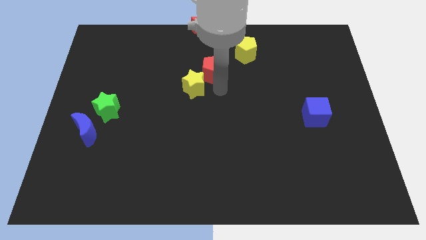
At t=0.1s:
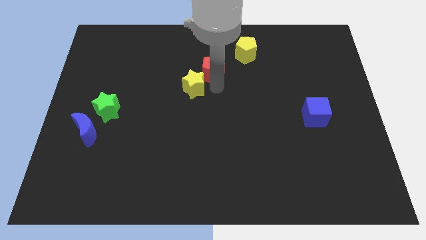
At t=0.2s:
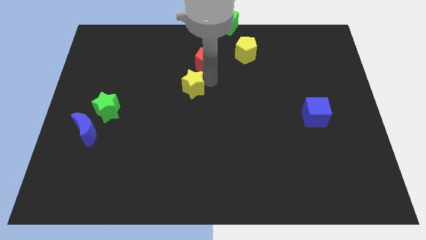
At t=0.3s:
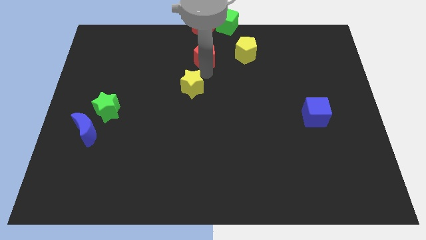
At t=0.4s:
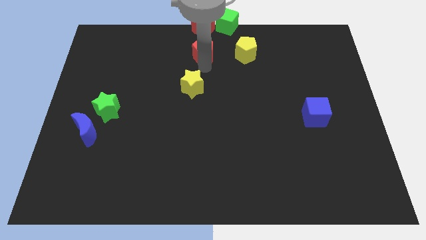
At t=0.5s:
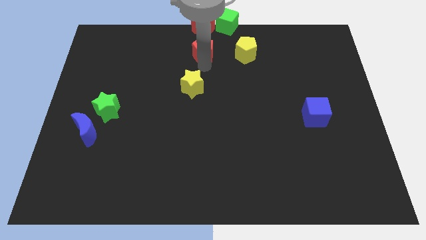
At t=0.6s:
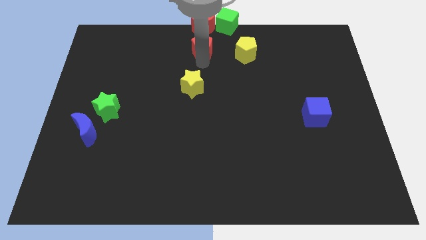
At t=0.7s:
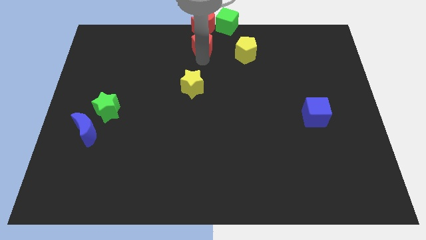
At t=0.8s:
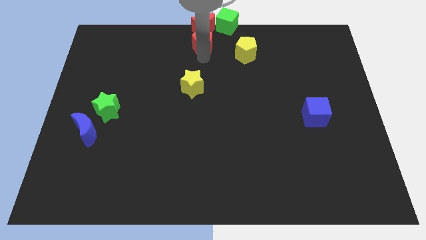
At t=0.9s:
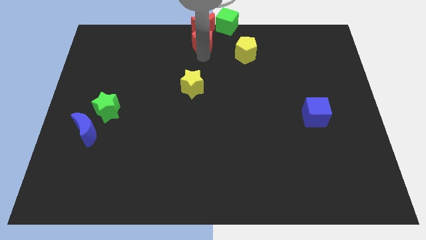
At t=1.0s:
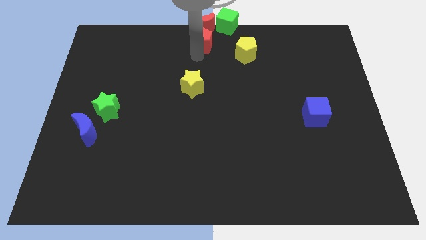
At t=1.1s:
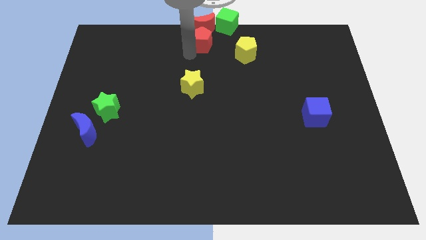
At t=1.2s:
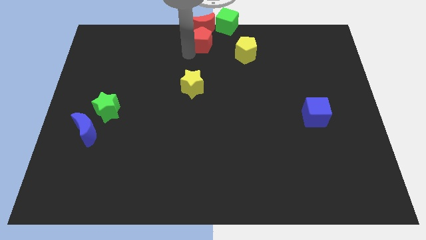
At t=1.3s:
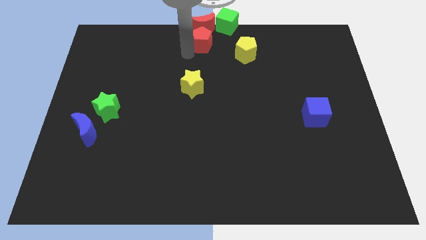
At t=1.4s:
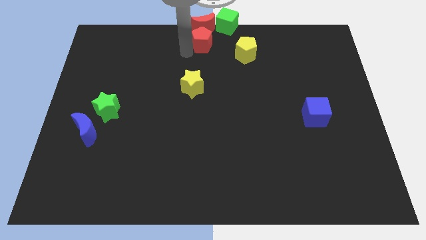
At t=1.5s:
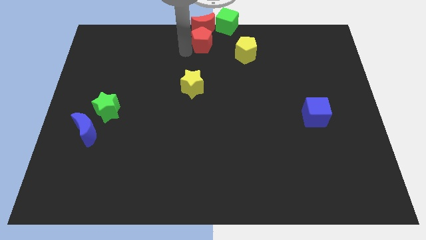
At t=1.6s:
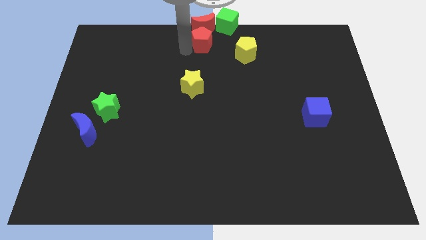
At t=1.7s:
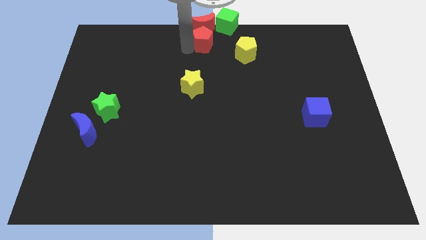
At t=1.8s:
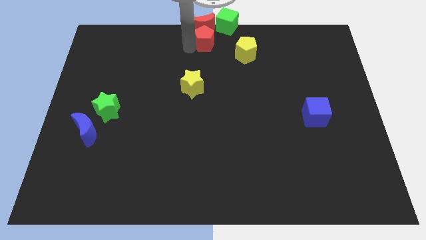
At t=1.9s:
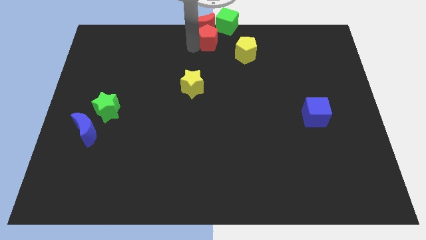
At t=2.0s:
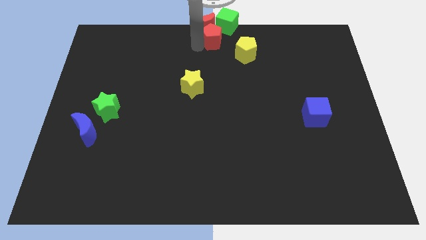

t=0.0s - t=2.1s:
push the red pentagon to the bottom of the red crescent

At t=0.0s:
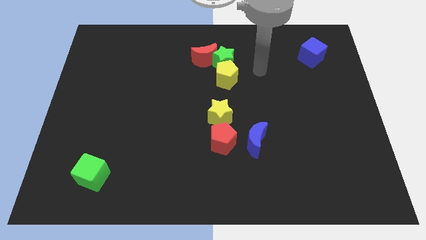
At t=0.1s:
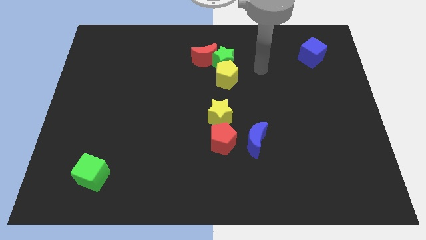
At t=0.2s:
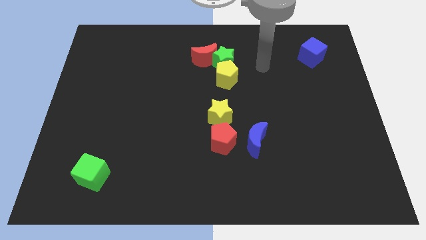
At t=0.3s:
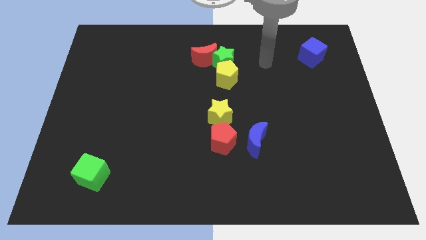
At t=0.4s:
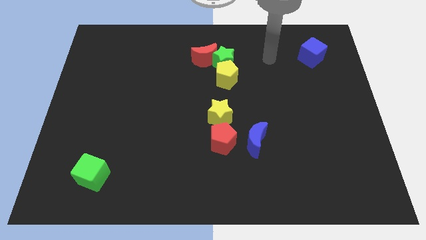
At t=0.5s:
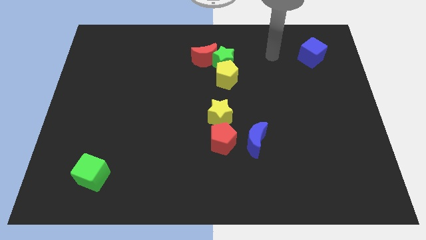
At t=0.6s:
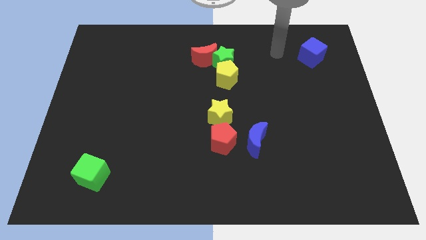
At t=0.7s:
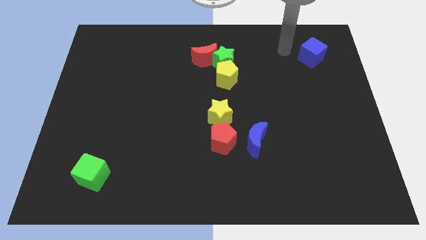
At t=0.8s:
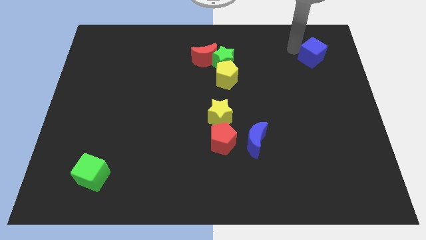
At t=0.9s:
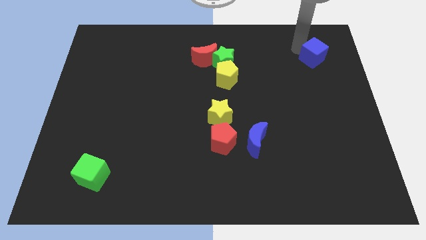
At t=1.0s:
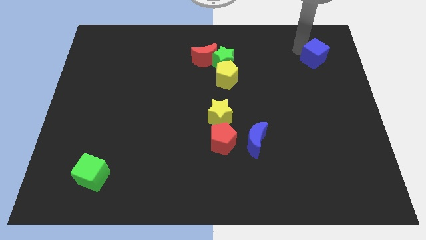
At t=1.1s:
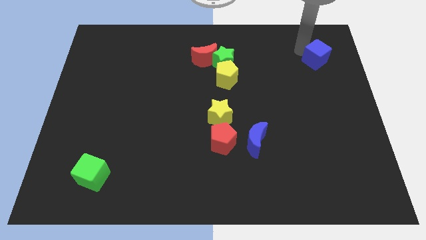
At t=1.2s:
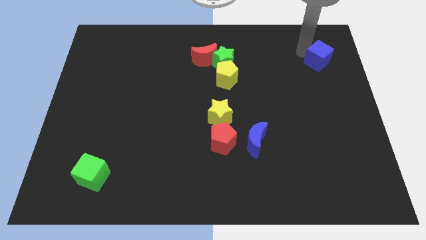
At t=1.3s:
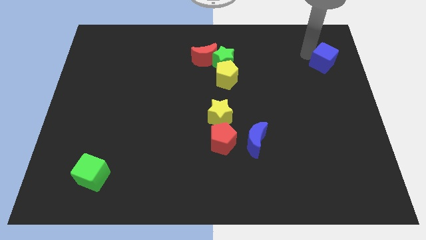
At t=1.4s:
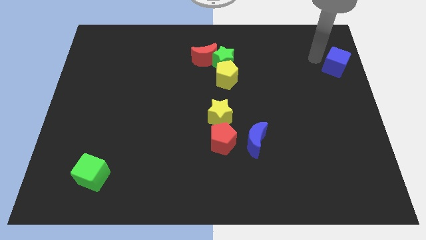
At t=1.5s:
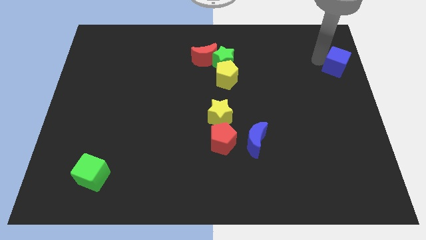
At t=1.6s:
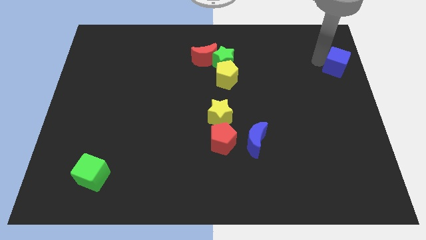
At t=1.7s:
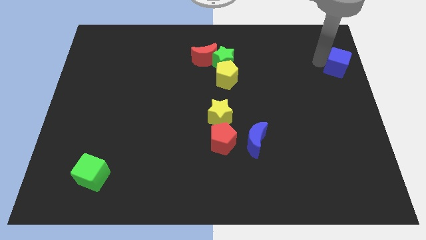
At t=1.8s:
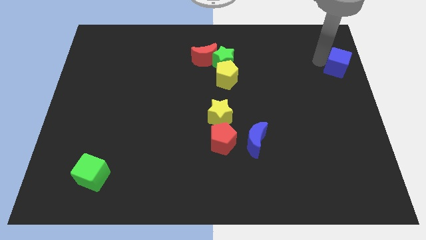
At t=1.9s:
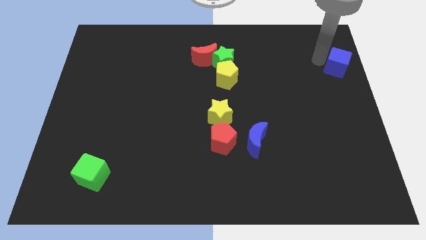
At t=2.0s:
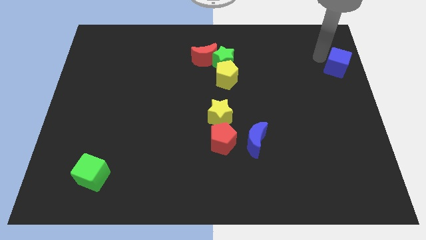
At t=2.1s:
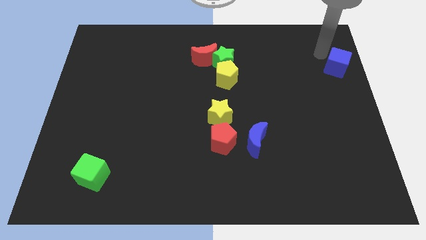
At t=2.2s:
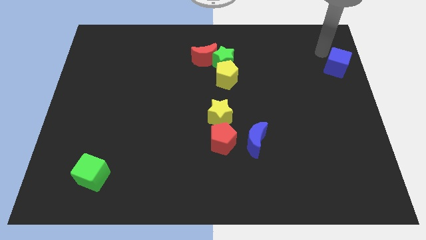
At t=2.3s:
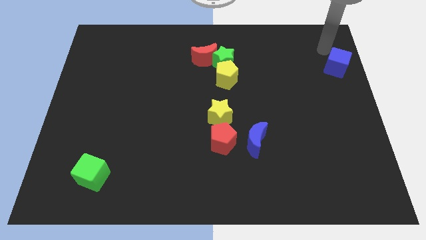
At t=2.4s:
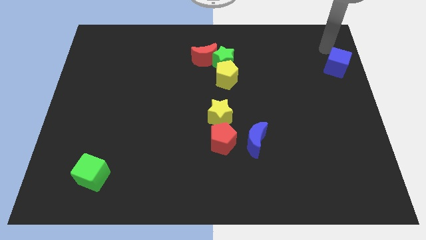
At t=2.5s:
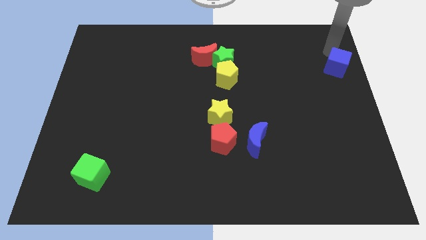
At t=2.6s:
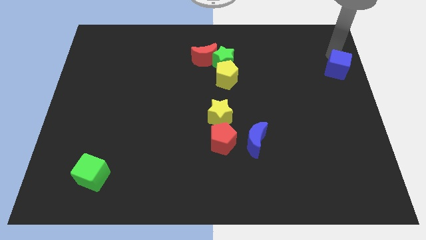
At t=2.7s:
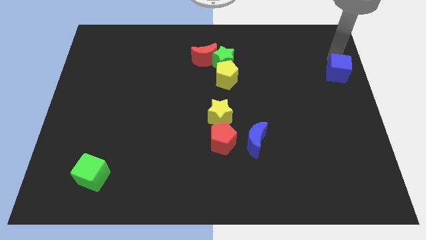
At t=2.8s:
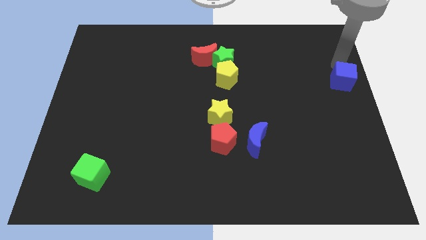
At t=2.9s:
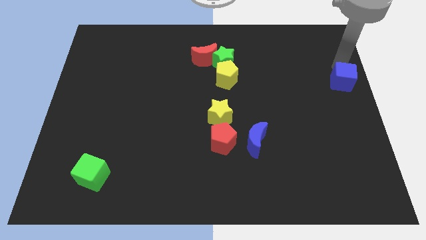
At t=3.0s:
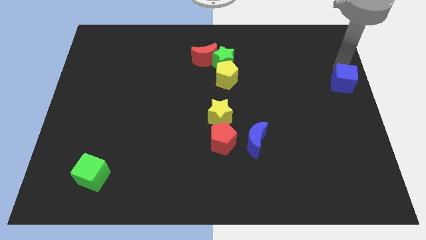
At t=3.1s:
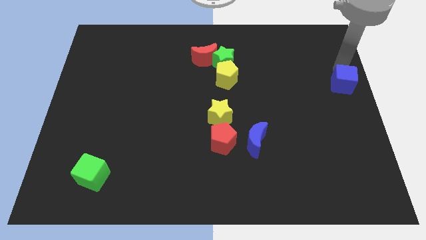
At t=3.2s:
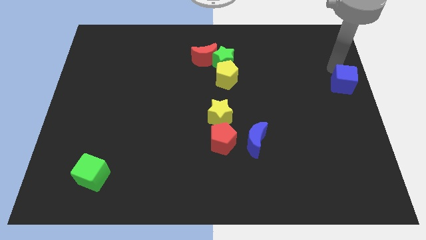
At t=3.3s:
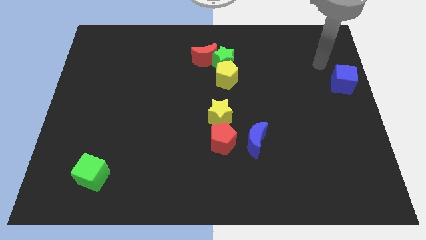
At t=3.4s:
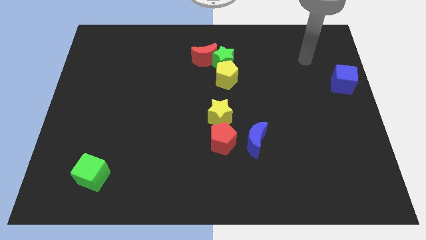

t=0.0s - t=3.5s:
move the blue cube towards the center left

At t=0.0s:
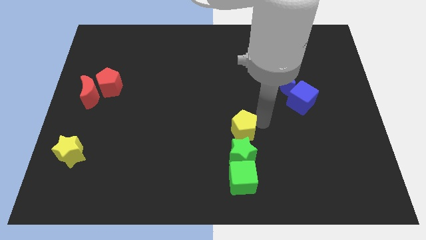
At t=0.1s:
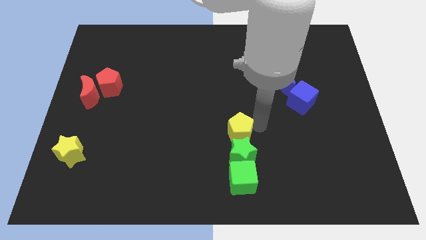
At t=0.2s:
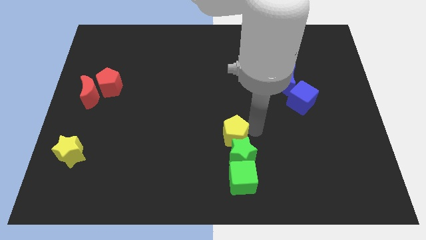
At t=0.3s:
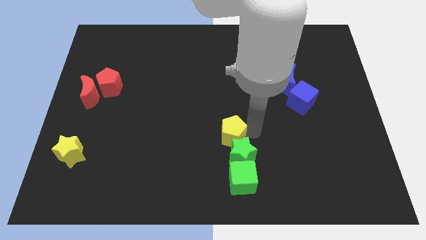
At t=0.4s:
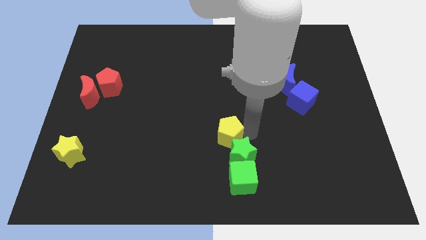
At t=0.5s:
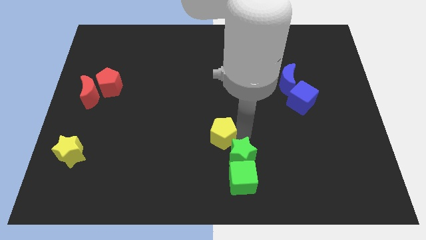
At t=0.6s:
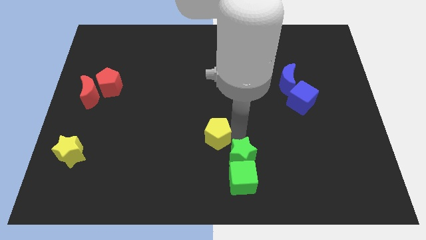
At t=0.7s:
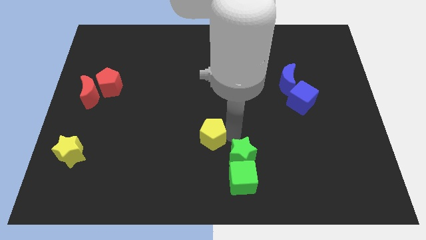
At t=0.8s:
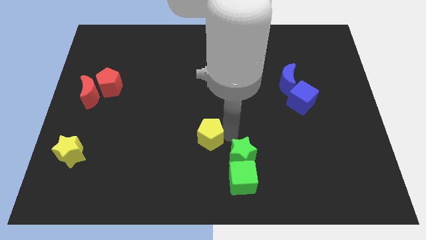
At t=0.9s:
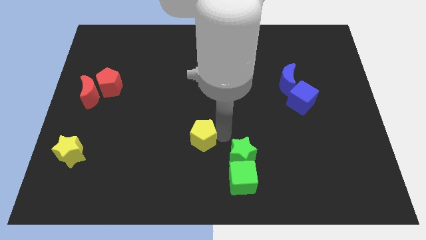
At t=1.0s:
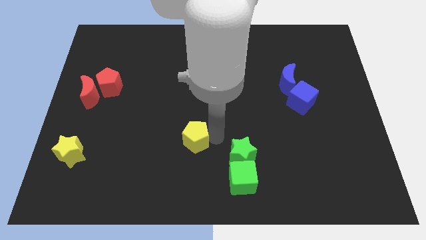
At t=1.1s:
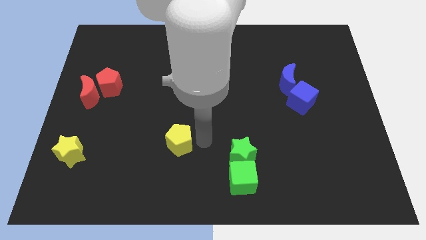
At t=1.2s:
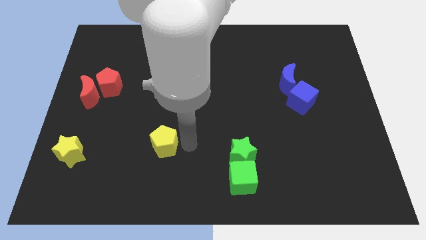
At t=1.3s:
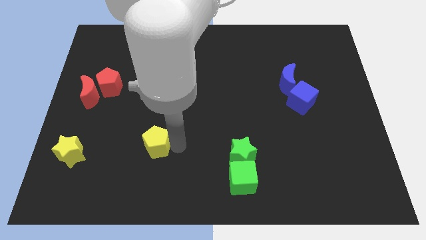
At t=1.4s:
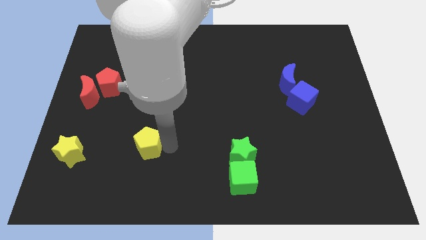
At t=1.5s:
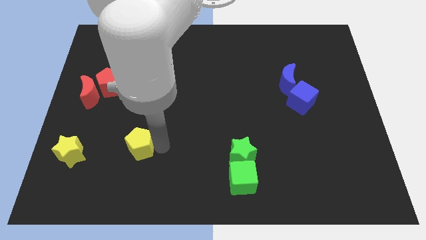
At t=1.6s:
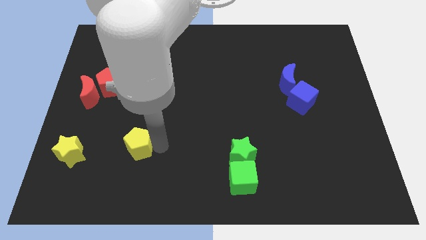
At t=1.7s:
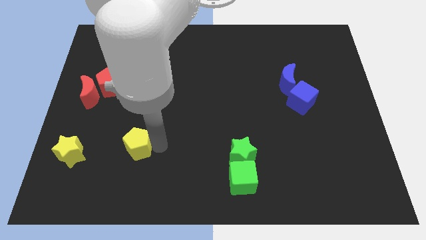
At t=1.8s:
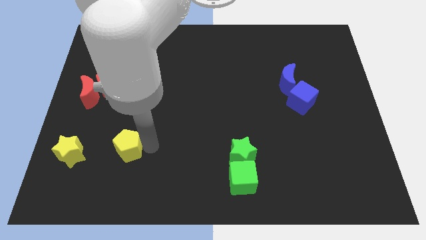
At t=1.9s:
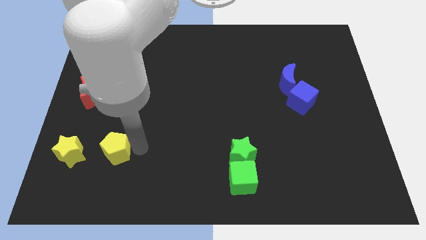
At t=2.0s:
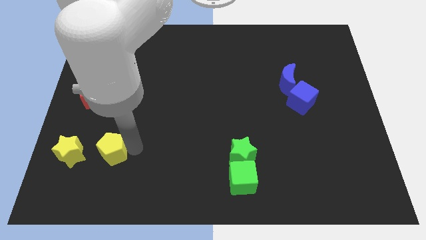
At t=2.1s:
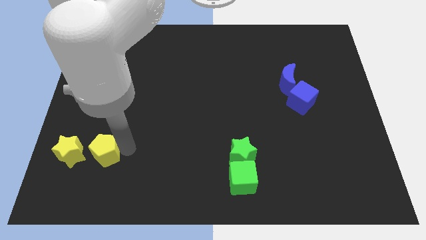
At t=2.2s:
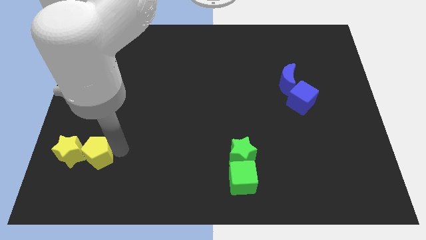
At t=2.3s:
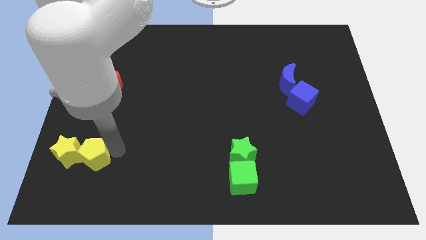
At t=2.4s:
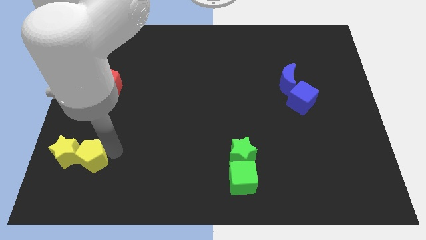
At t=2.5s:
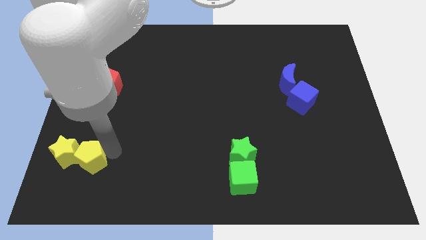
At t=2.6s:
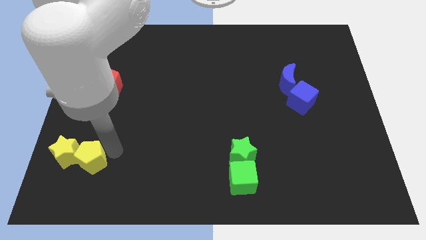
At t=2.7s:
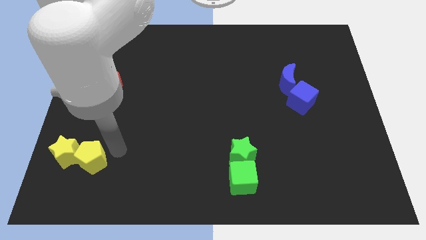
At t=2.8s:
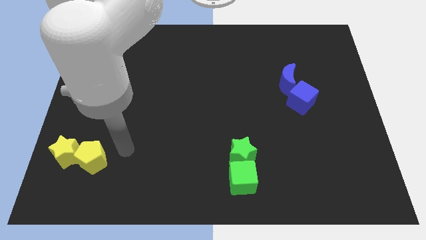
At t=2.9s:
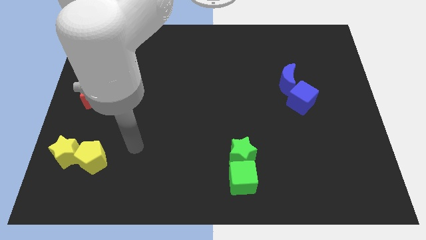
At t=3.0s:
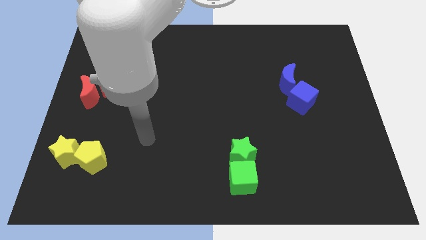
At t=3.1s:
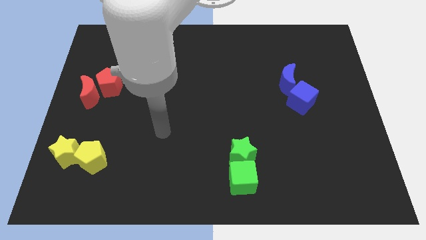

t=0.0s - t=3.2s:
push yellow pentagon below the yellow star
